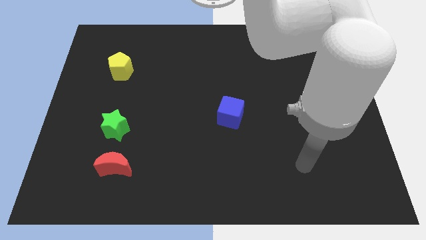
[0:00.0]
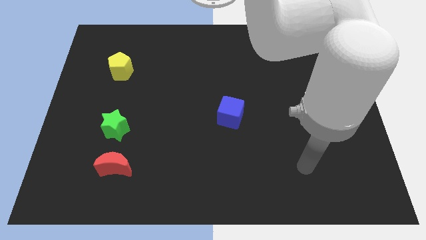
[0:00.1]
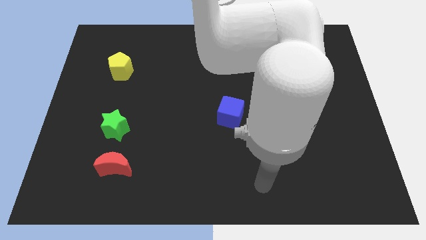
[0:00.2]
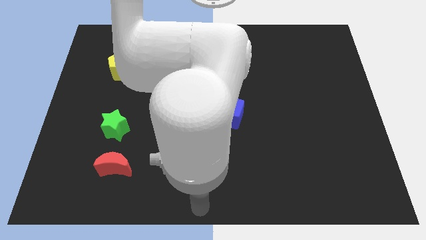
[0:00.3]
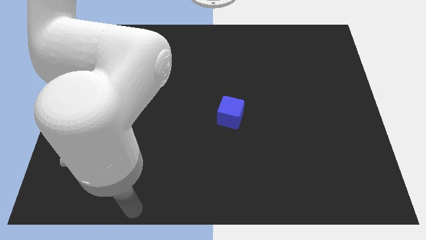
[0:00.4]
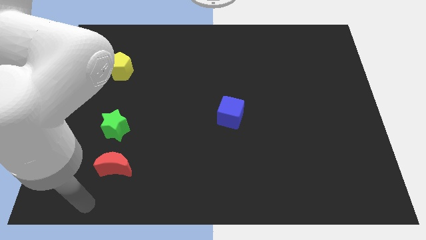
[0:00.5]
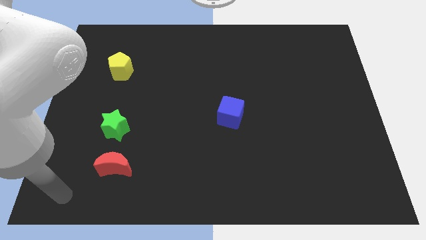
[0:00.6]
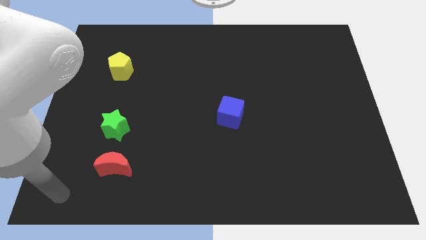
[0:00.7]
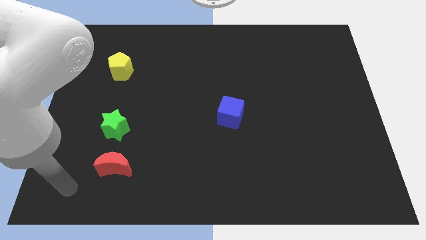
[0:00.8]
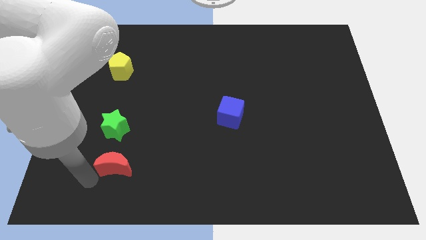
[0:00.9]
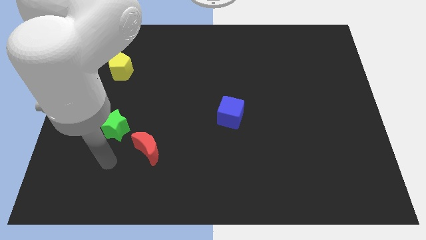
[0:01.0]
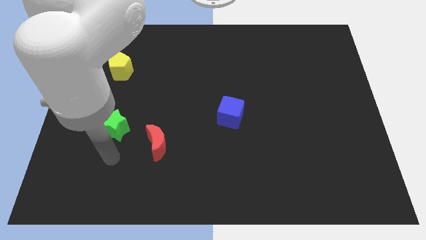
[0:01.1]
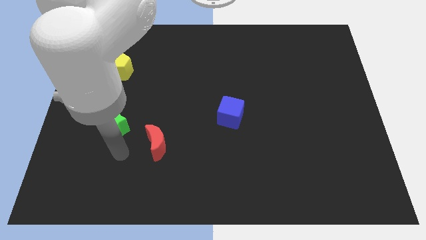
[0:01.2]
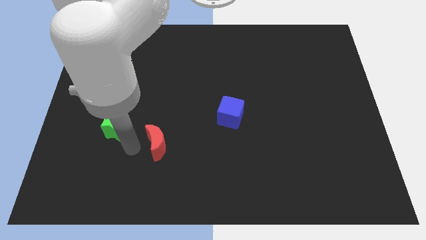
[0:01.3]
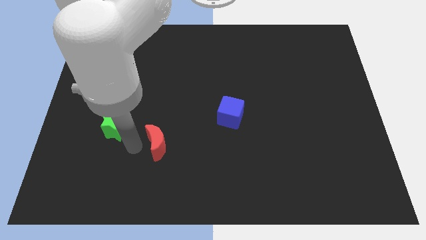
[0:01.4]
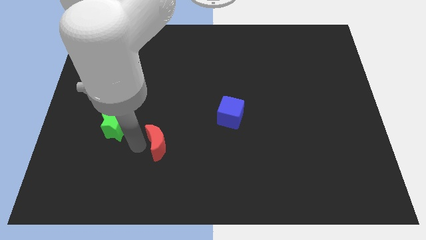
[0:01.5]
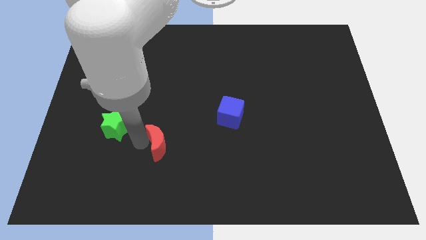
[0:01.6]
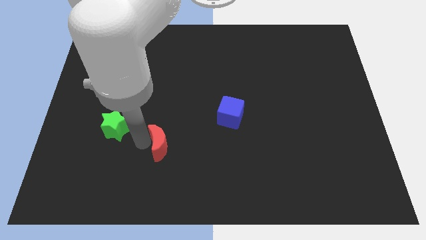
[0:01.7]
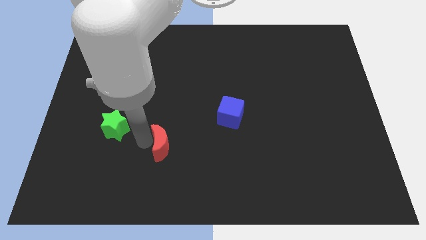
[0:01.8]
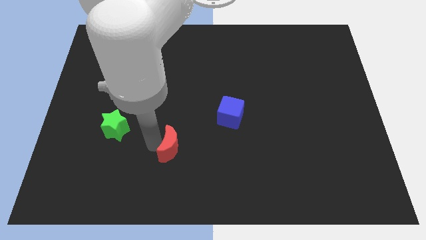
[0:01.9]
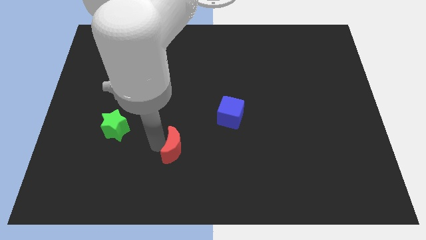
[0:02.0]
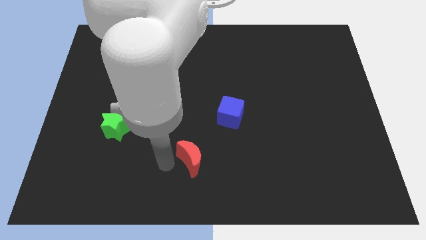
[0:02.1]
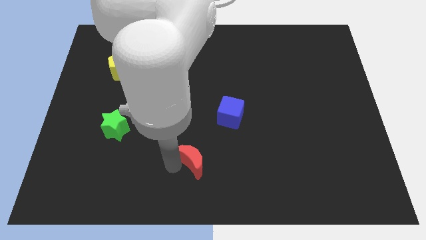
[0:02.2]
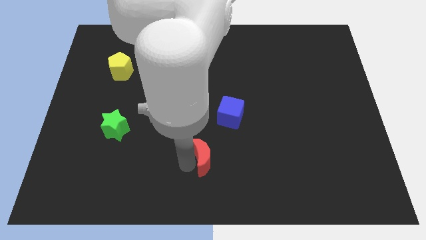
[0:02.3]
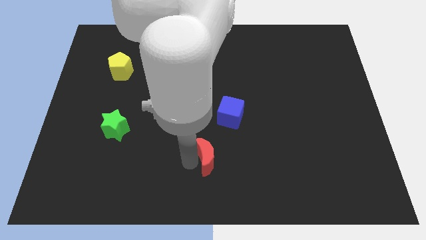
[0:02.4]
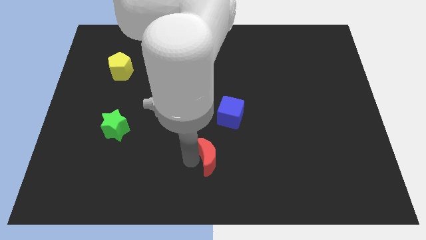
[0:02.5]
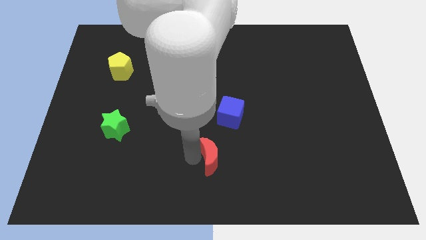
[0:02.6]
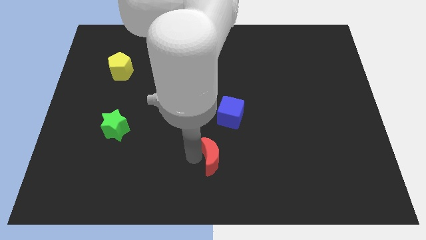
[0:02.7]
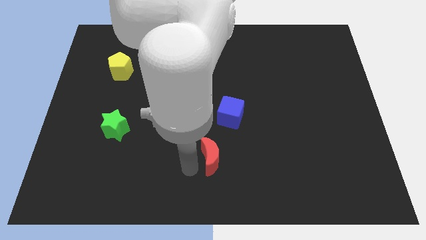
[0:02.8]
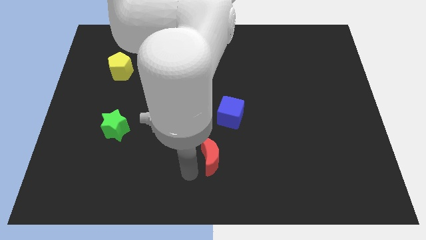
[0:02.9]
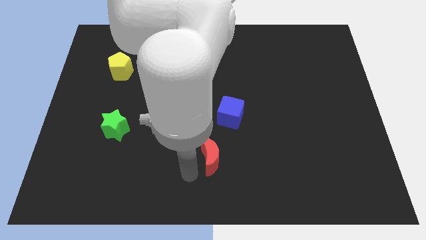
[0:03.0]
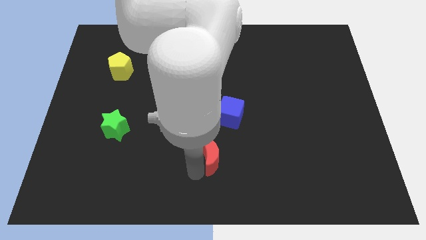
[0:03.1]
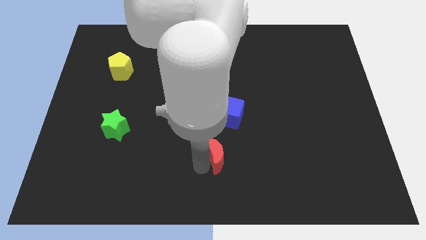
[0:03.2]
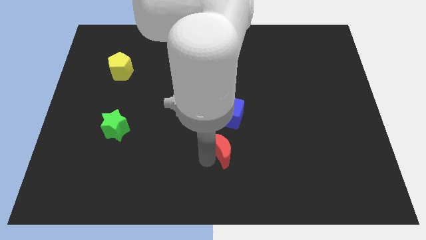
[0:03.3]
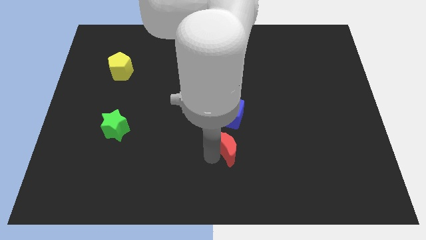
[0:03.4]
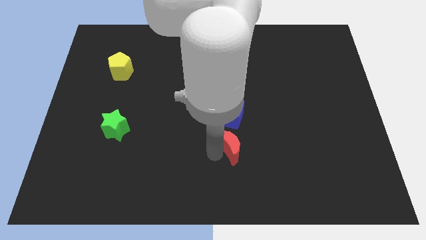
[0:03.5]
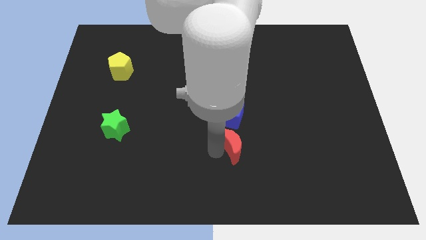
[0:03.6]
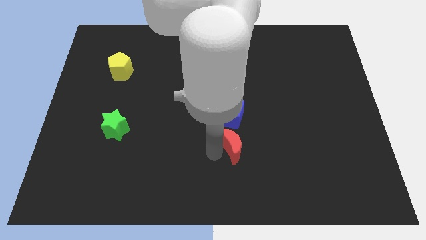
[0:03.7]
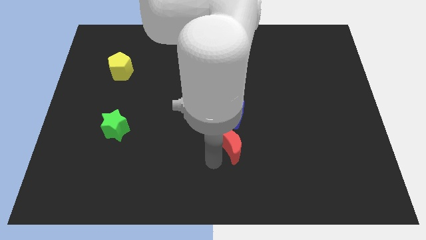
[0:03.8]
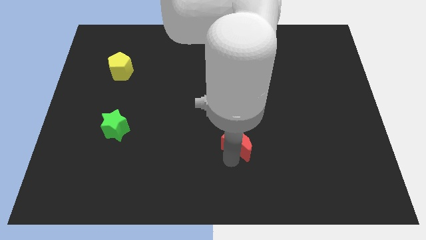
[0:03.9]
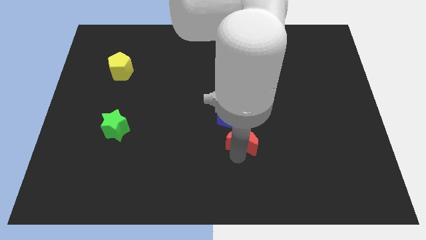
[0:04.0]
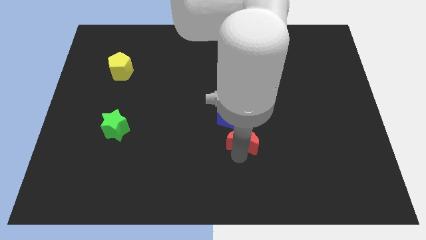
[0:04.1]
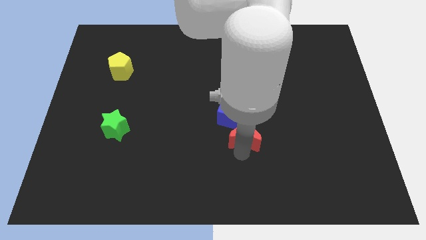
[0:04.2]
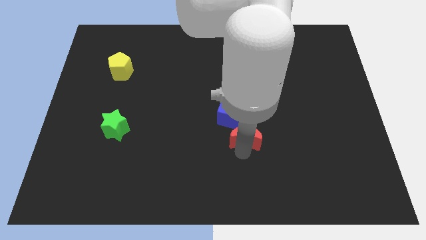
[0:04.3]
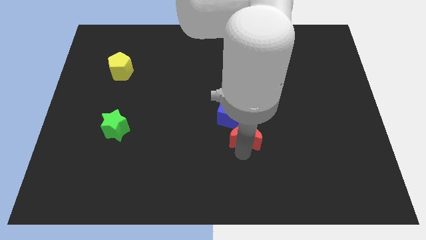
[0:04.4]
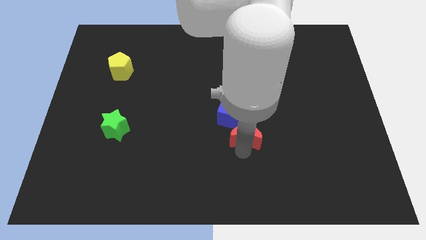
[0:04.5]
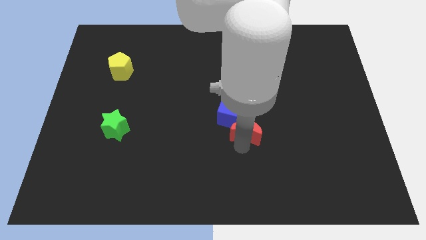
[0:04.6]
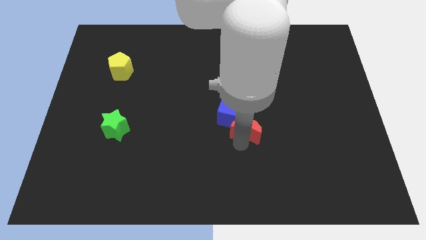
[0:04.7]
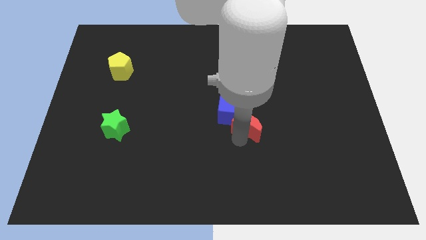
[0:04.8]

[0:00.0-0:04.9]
slide the red moon towards the blue block

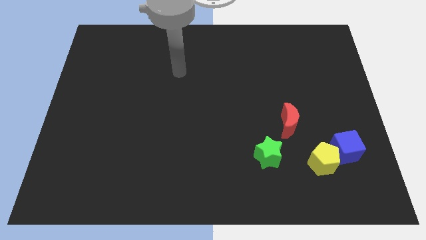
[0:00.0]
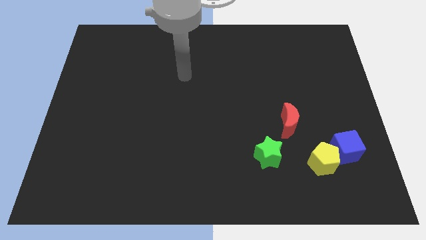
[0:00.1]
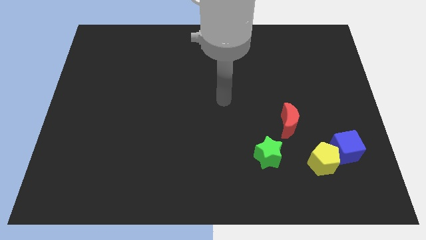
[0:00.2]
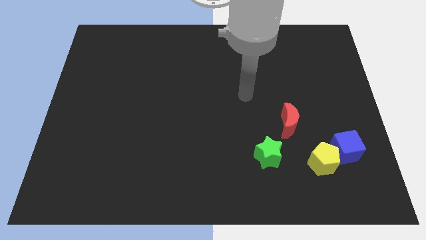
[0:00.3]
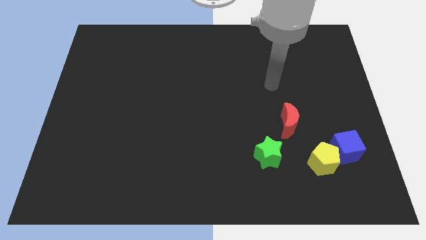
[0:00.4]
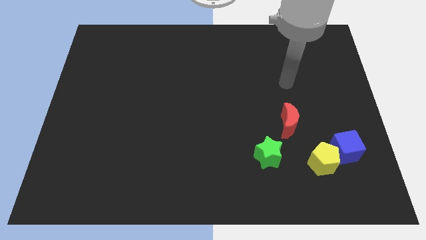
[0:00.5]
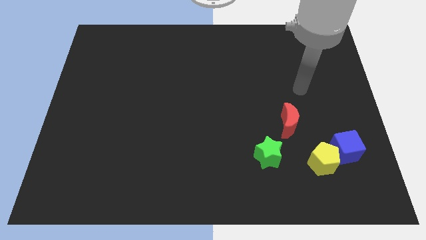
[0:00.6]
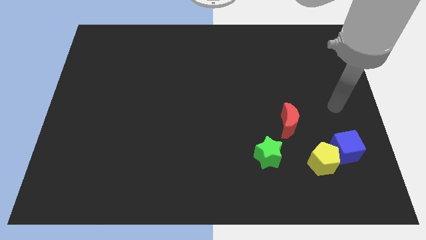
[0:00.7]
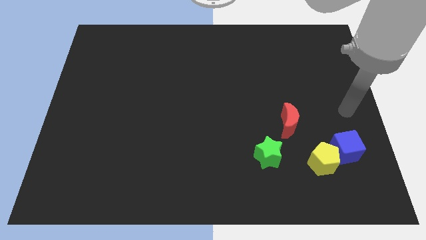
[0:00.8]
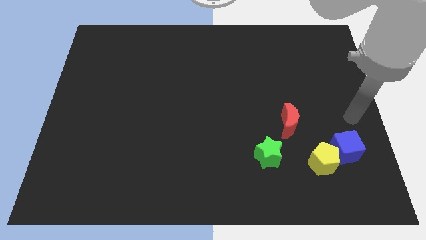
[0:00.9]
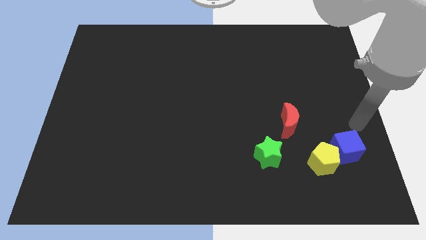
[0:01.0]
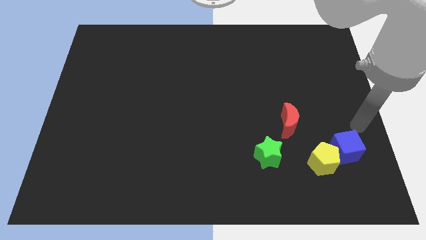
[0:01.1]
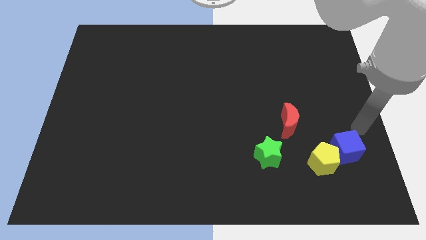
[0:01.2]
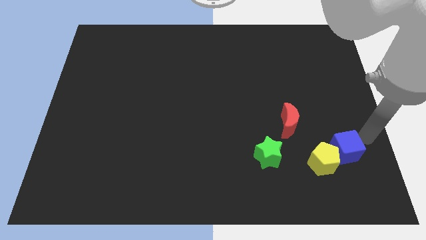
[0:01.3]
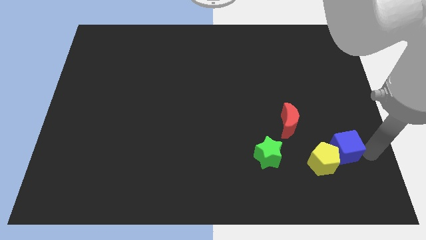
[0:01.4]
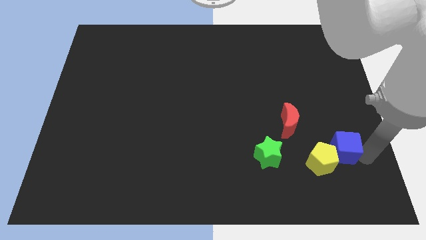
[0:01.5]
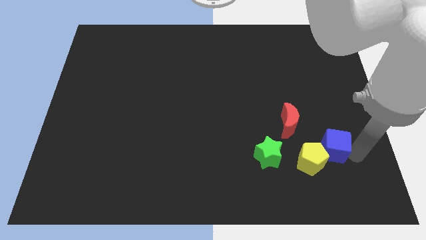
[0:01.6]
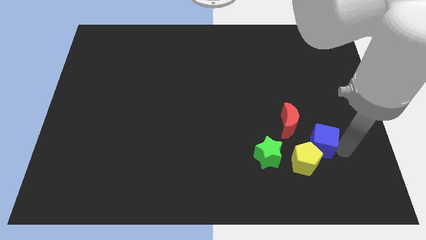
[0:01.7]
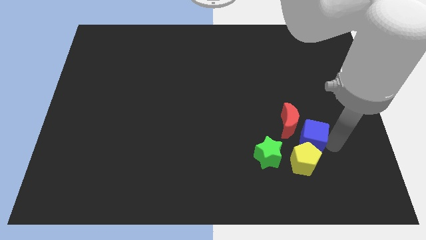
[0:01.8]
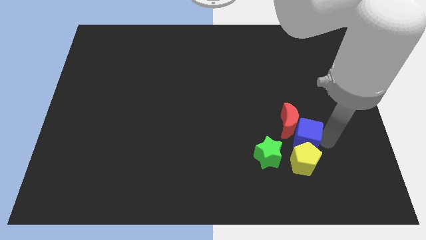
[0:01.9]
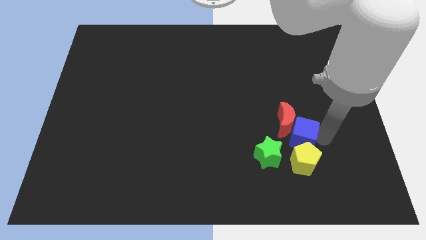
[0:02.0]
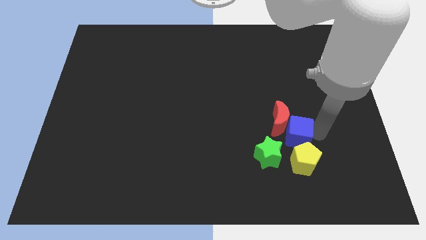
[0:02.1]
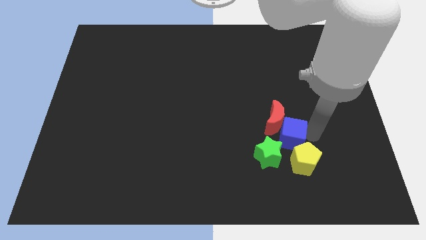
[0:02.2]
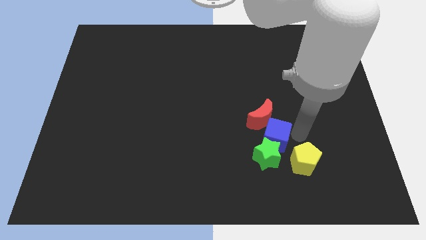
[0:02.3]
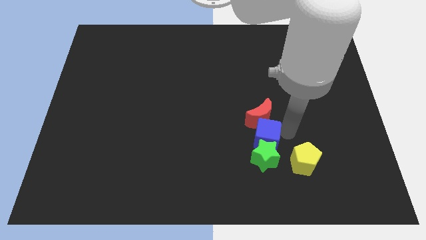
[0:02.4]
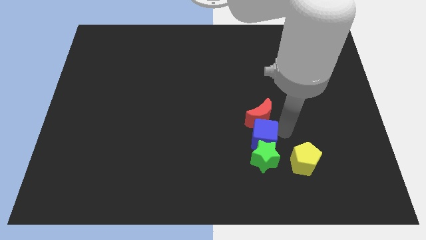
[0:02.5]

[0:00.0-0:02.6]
put the blue cube close to the green block

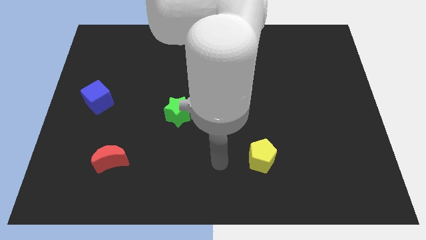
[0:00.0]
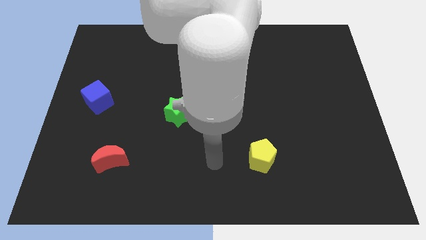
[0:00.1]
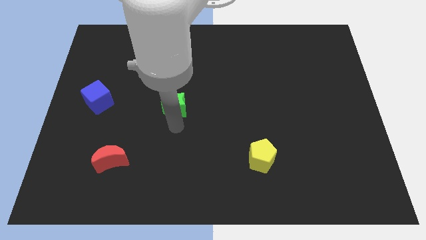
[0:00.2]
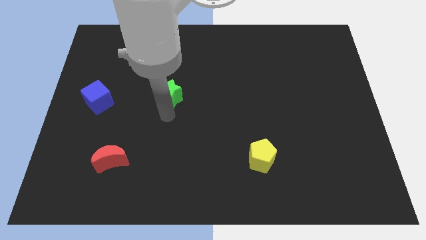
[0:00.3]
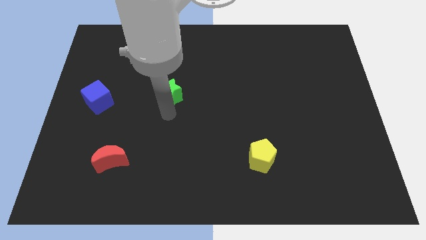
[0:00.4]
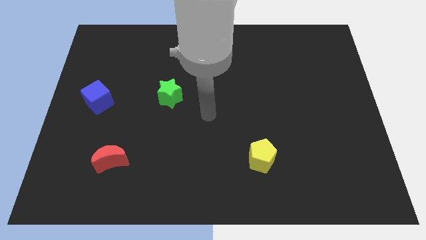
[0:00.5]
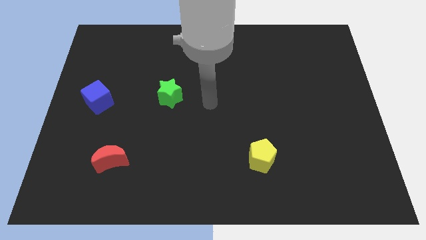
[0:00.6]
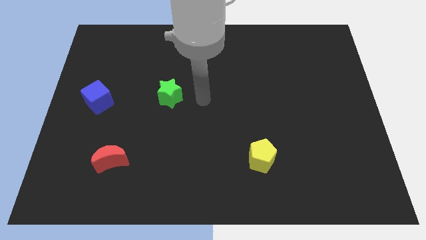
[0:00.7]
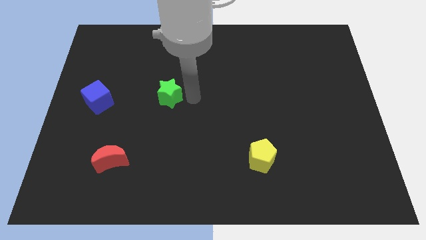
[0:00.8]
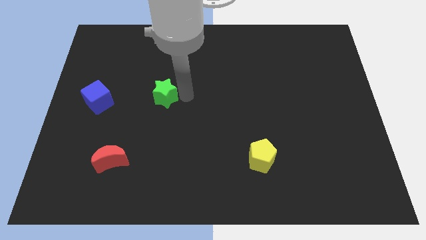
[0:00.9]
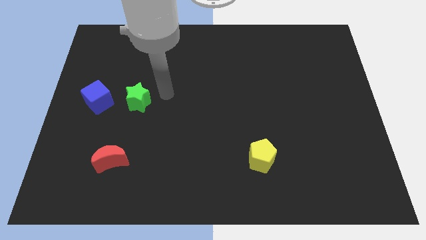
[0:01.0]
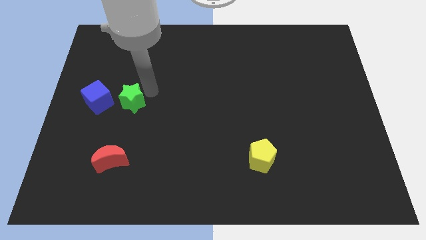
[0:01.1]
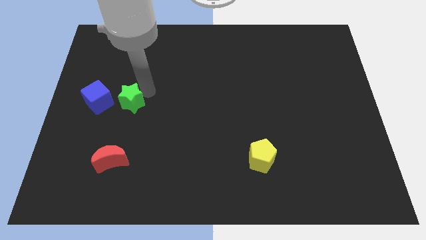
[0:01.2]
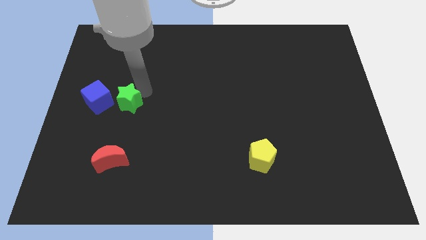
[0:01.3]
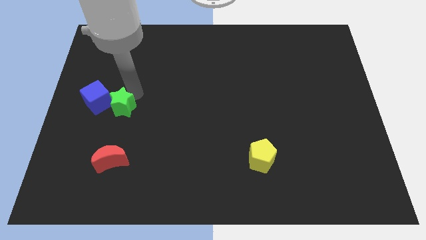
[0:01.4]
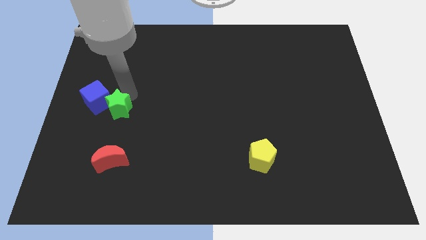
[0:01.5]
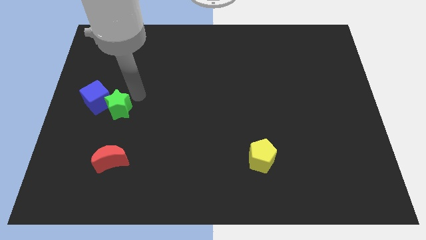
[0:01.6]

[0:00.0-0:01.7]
slide the star to the cube
